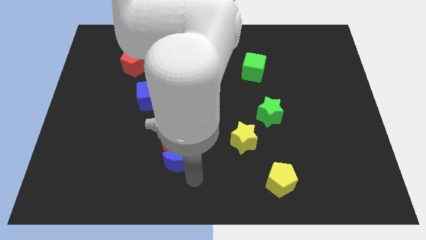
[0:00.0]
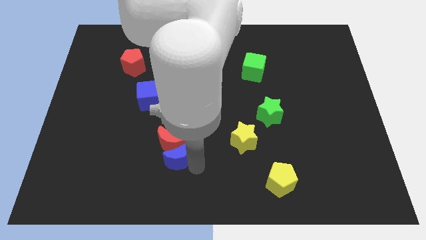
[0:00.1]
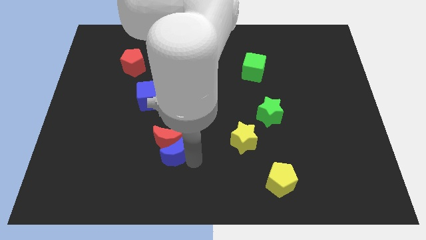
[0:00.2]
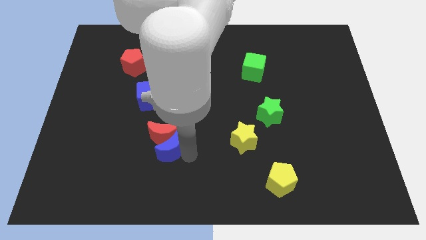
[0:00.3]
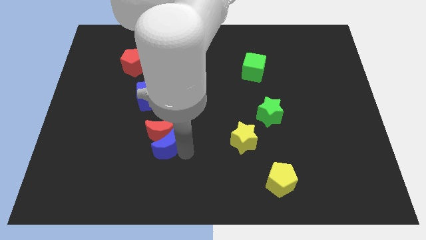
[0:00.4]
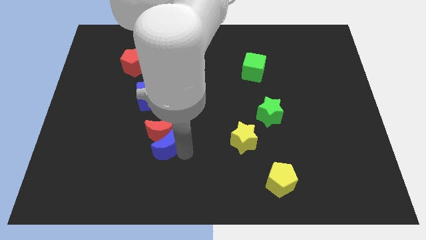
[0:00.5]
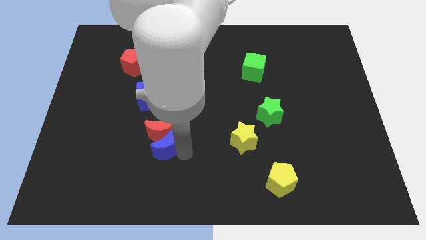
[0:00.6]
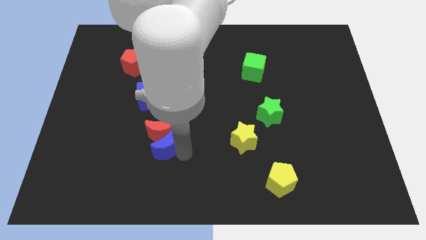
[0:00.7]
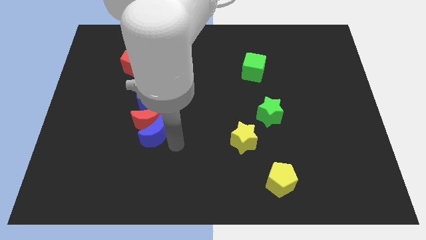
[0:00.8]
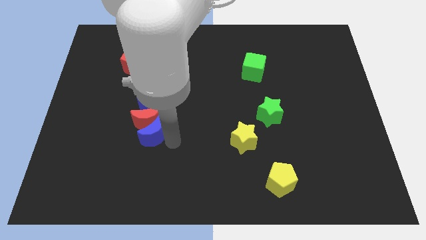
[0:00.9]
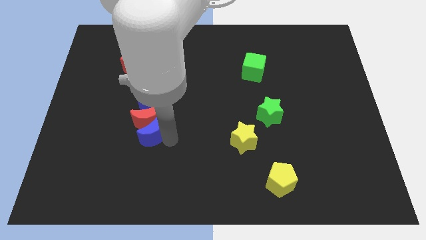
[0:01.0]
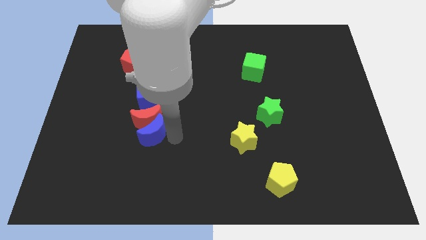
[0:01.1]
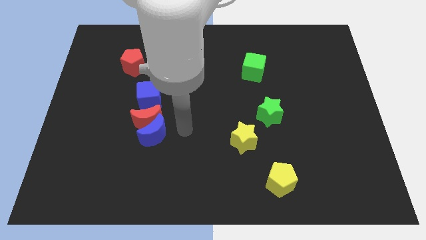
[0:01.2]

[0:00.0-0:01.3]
push the blue and red crescents to the bottom of the blue cube

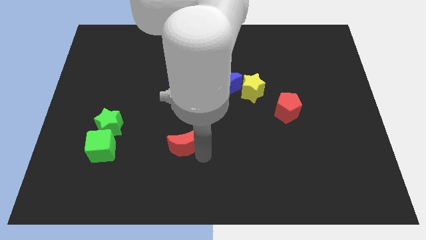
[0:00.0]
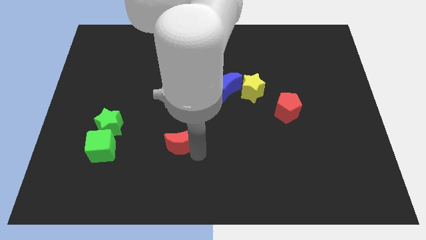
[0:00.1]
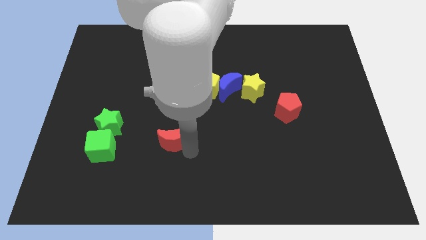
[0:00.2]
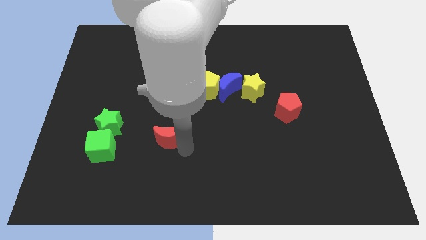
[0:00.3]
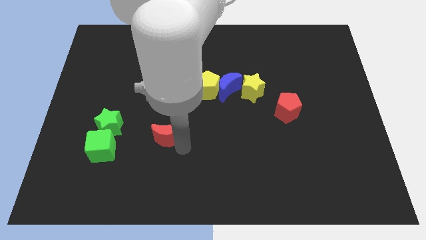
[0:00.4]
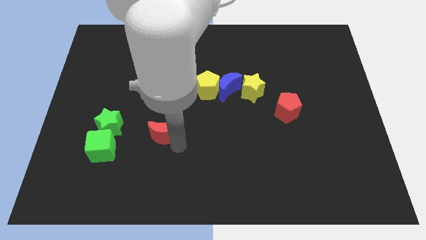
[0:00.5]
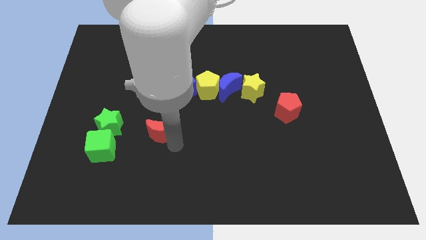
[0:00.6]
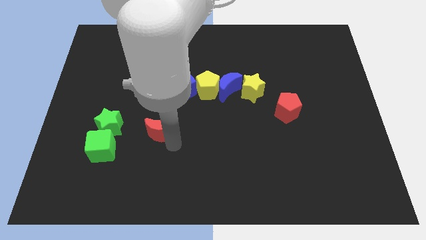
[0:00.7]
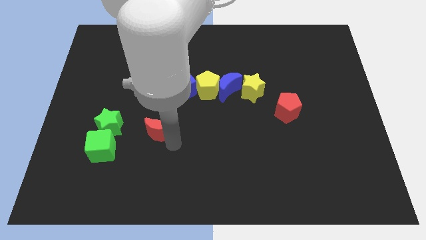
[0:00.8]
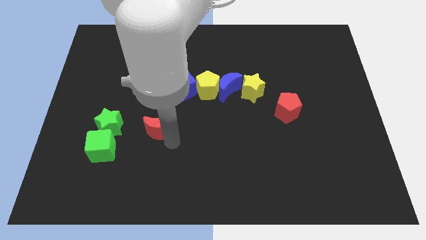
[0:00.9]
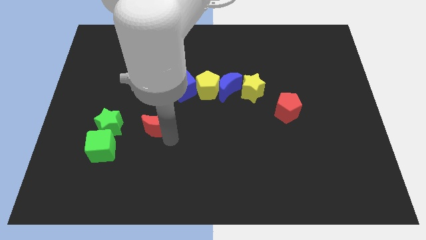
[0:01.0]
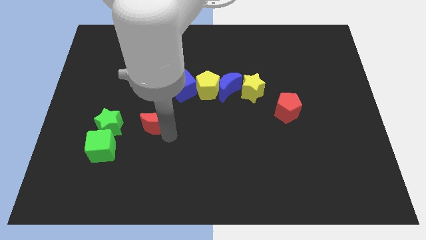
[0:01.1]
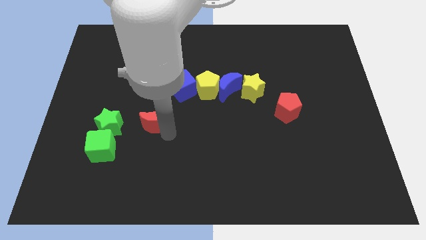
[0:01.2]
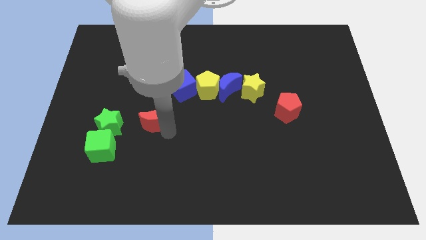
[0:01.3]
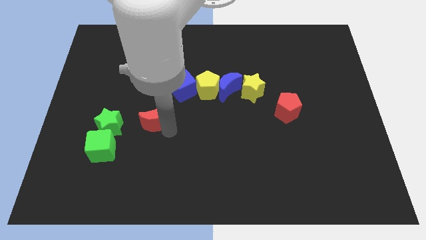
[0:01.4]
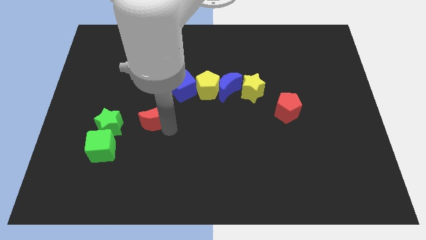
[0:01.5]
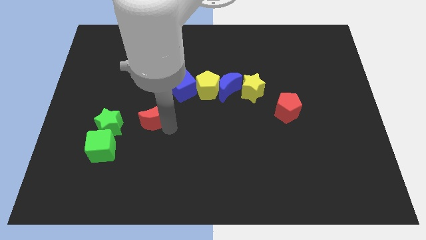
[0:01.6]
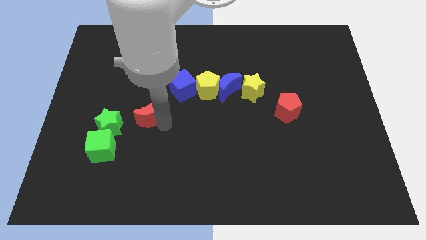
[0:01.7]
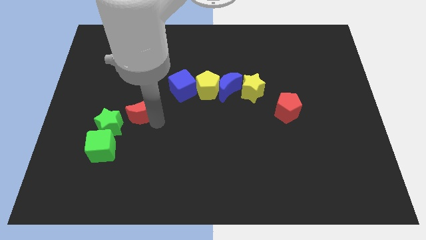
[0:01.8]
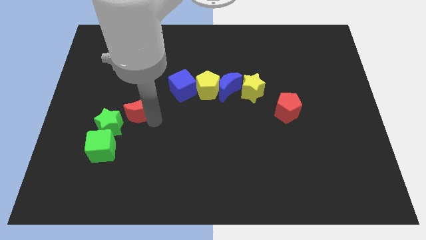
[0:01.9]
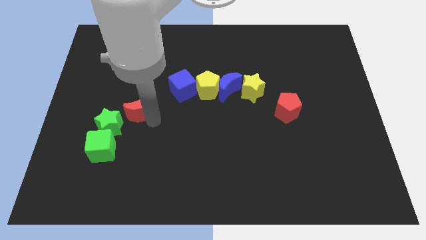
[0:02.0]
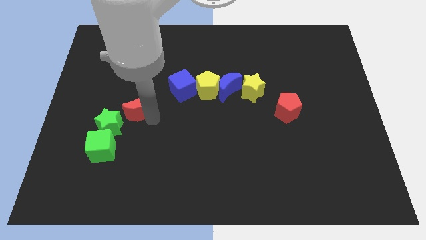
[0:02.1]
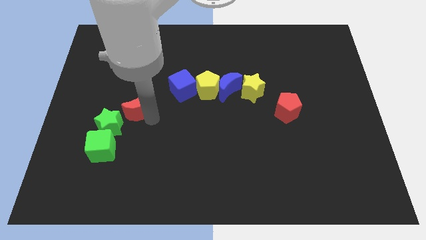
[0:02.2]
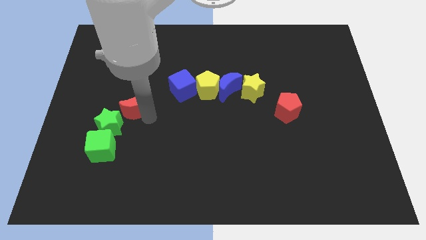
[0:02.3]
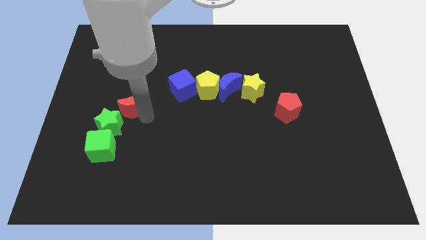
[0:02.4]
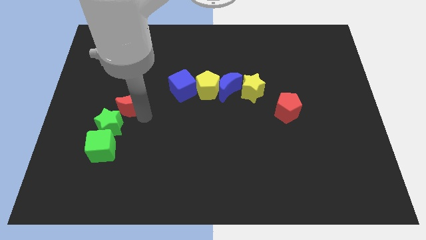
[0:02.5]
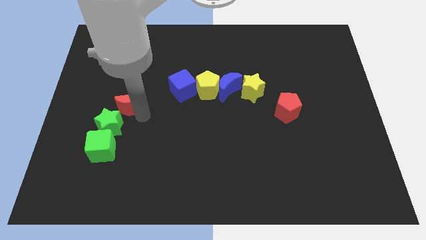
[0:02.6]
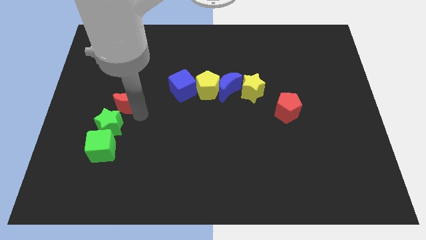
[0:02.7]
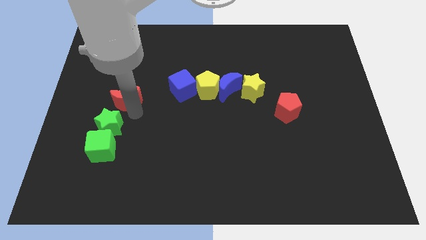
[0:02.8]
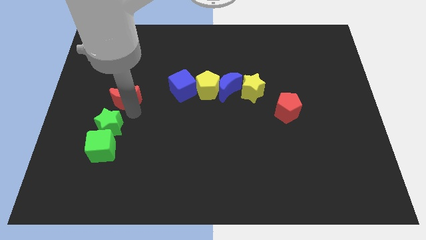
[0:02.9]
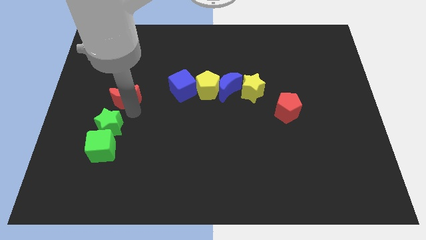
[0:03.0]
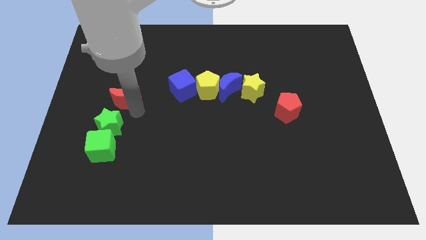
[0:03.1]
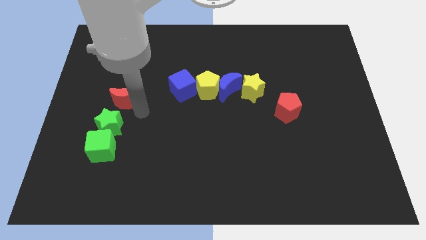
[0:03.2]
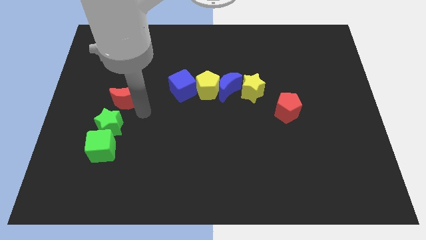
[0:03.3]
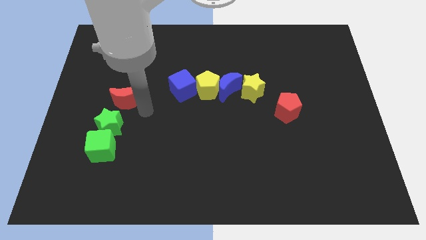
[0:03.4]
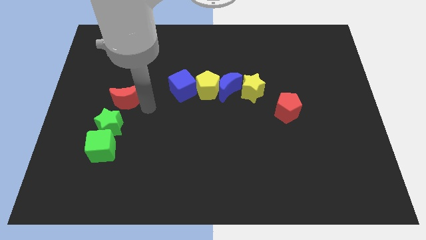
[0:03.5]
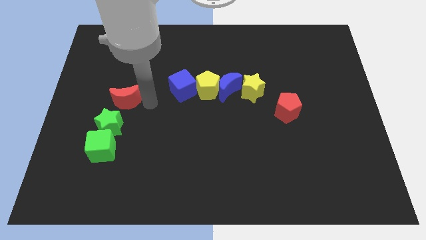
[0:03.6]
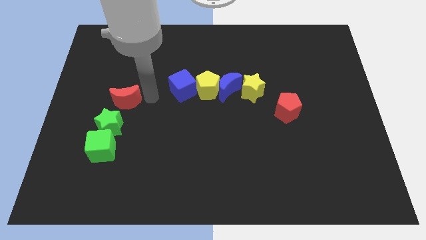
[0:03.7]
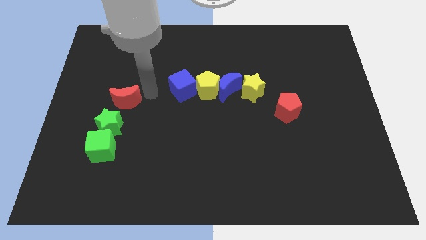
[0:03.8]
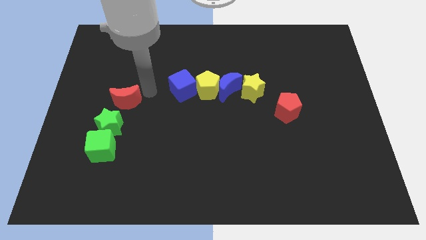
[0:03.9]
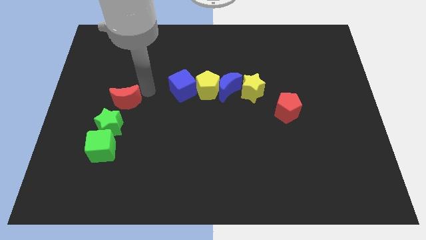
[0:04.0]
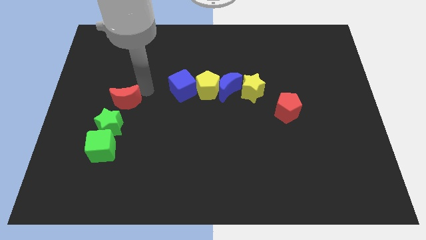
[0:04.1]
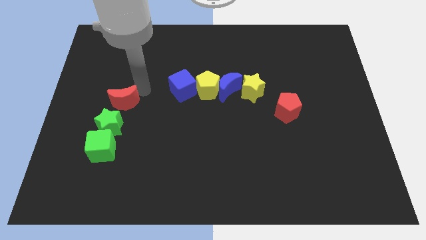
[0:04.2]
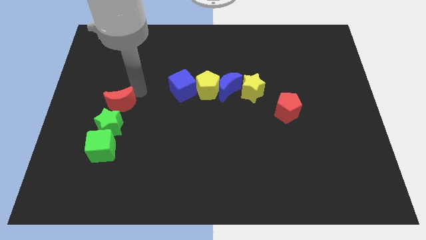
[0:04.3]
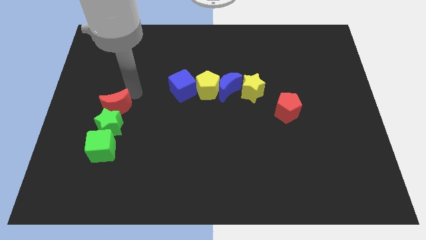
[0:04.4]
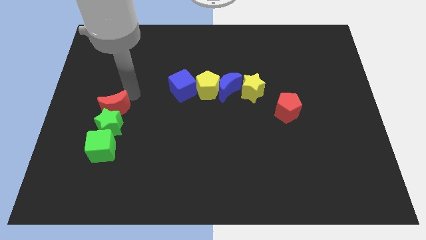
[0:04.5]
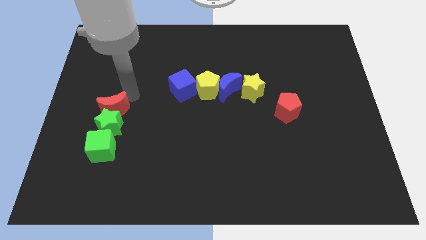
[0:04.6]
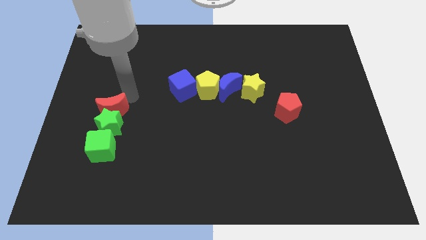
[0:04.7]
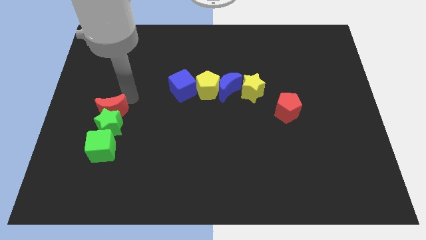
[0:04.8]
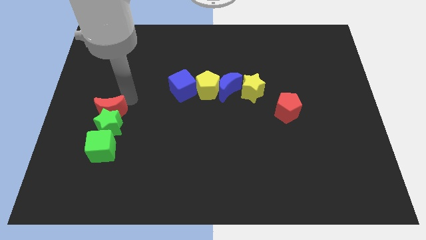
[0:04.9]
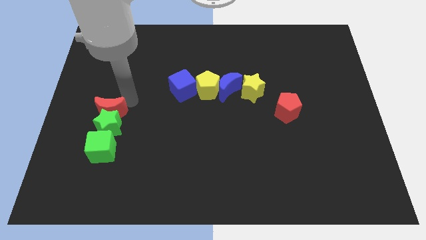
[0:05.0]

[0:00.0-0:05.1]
push the red crescent on top of the green star

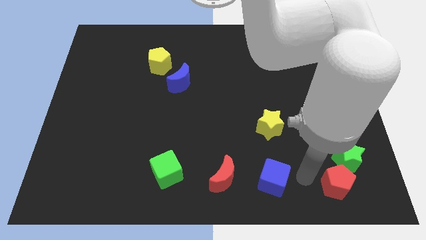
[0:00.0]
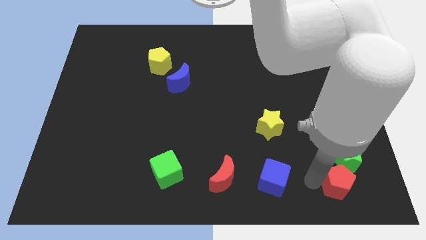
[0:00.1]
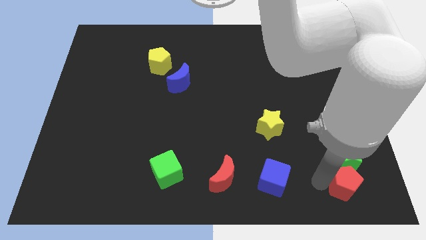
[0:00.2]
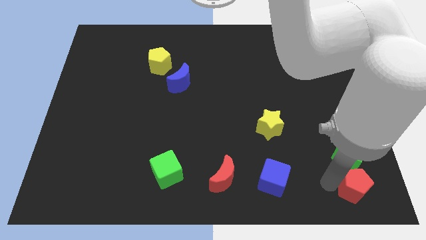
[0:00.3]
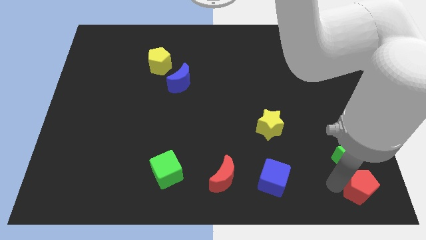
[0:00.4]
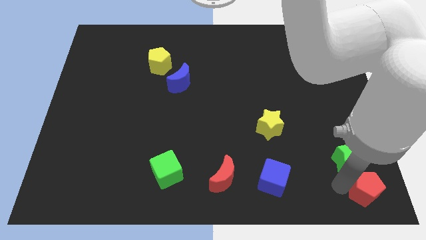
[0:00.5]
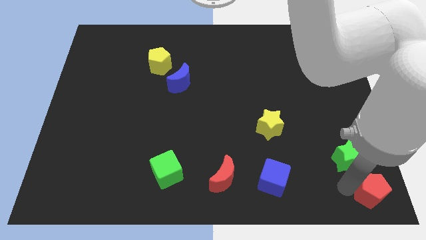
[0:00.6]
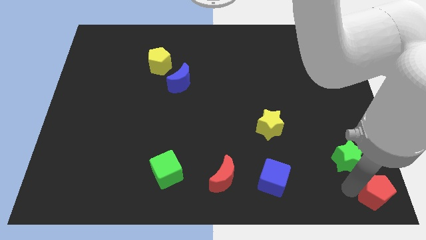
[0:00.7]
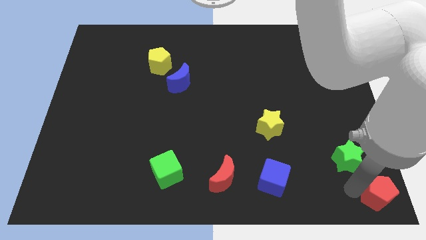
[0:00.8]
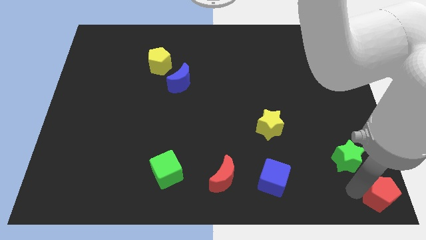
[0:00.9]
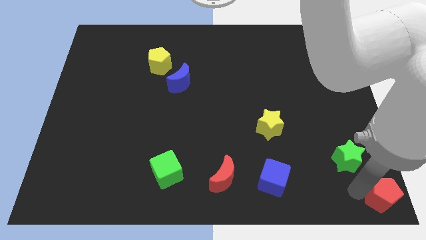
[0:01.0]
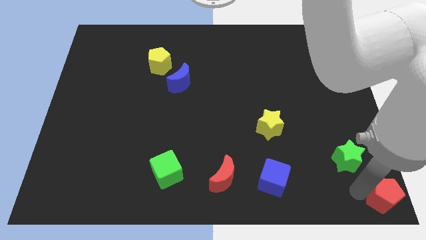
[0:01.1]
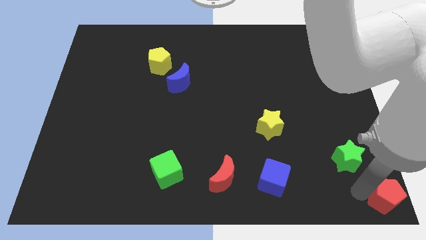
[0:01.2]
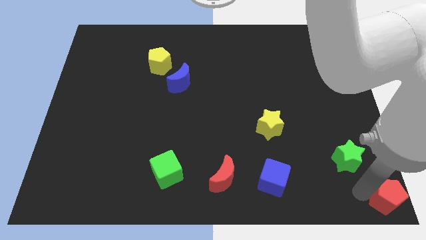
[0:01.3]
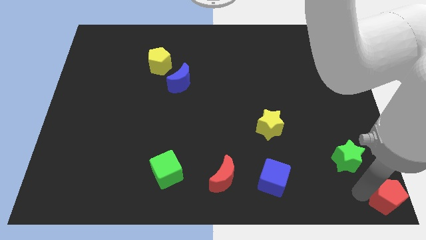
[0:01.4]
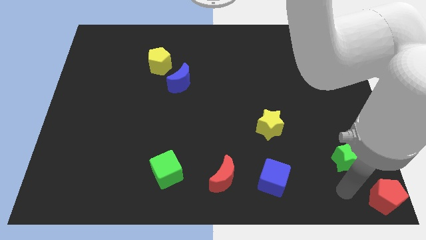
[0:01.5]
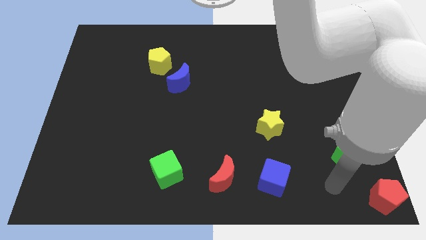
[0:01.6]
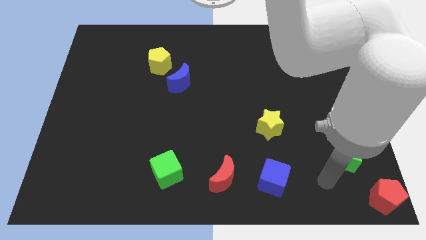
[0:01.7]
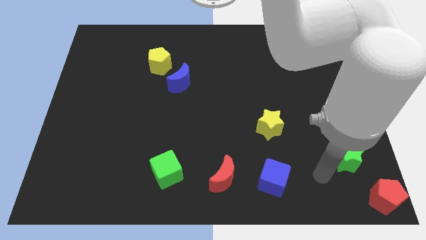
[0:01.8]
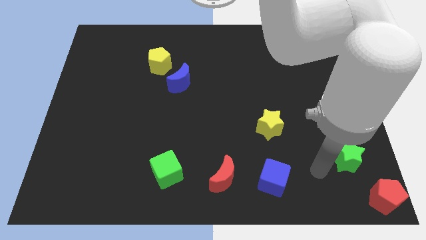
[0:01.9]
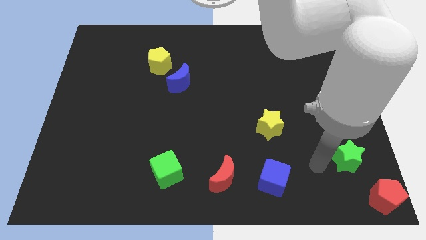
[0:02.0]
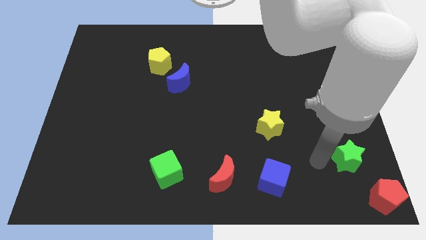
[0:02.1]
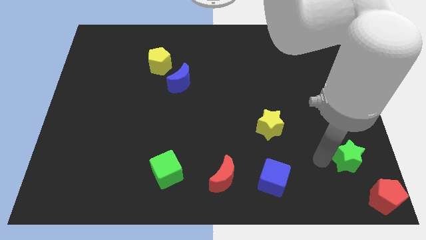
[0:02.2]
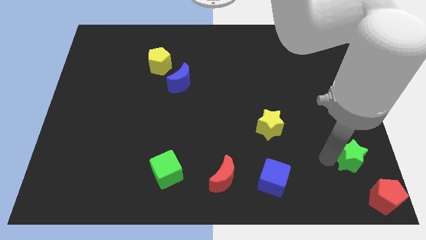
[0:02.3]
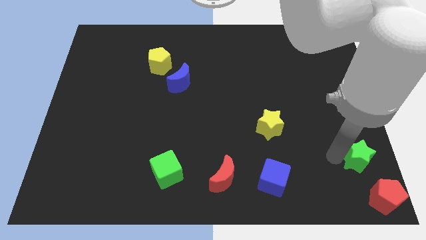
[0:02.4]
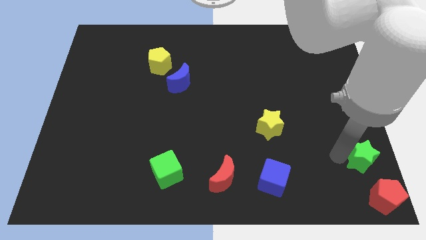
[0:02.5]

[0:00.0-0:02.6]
push the red pentagon to the bottom right of the board
